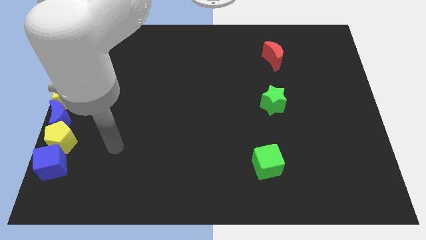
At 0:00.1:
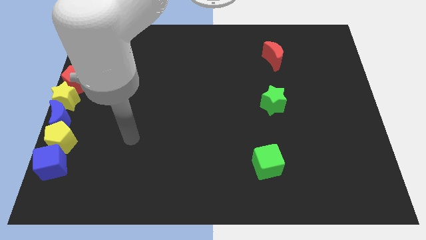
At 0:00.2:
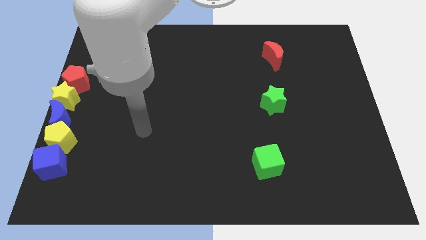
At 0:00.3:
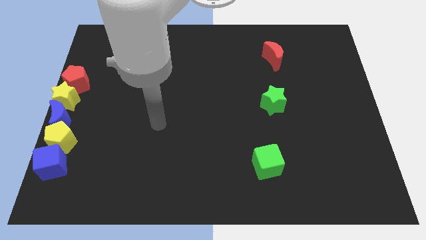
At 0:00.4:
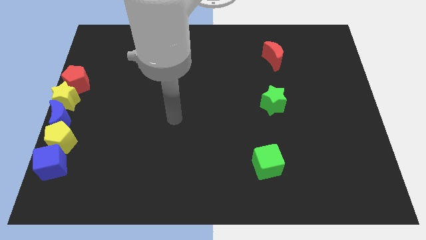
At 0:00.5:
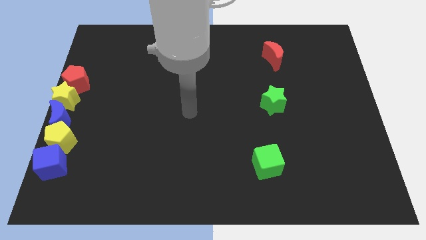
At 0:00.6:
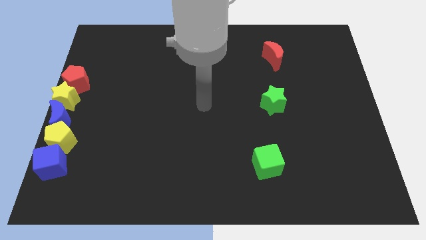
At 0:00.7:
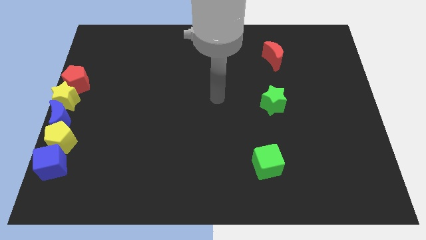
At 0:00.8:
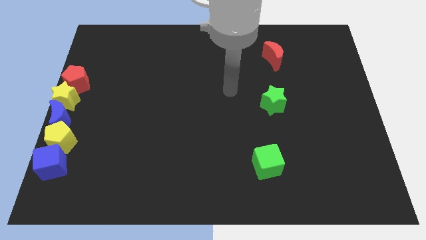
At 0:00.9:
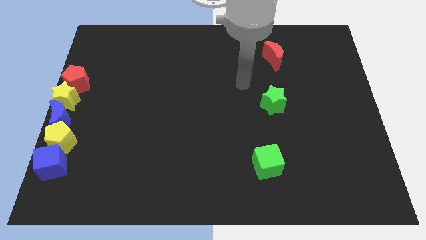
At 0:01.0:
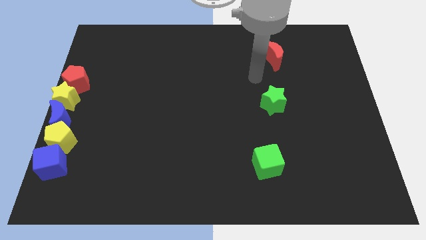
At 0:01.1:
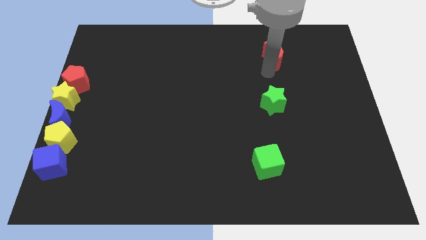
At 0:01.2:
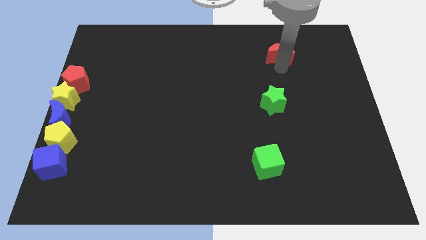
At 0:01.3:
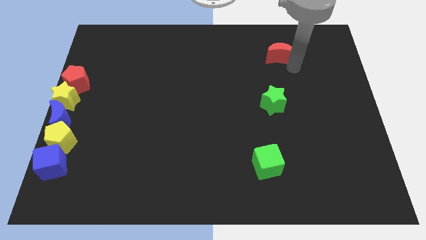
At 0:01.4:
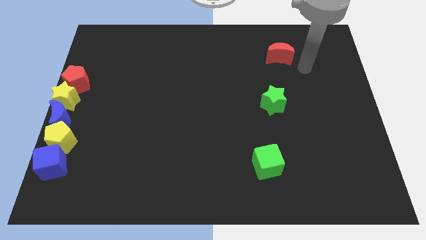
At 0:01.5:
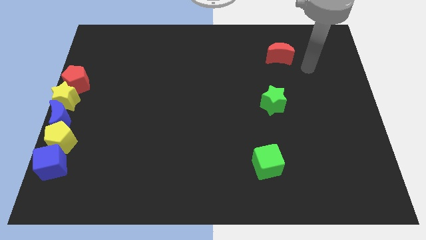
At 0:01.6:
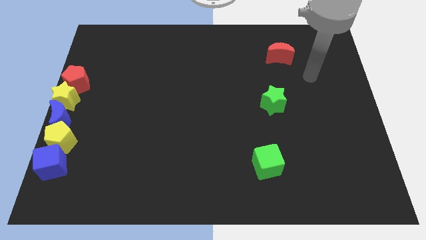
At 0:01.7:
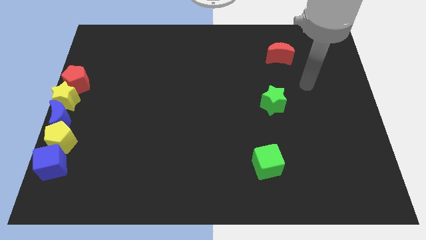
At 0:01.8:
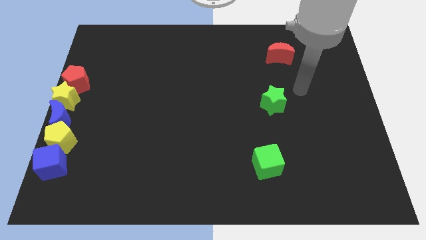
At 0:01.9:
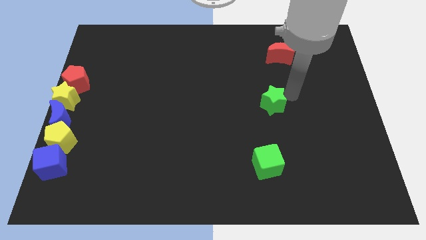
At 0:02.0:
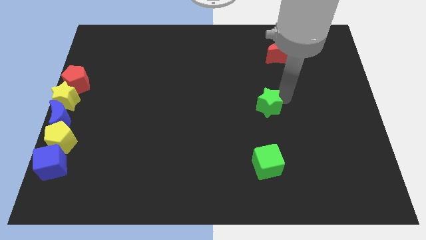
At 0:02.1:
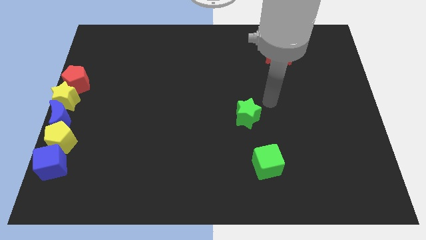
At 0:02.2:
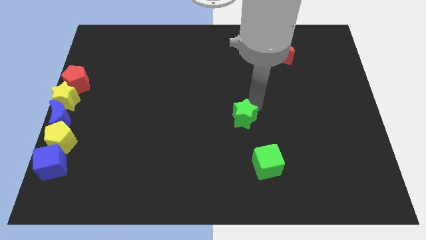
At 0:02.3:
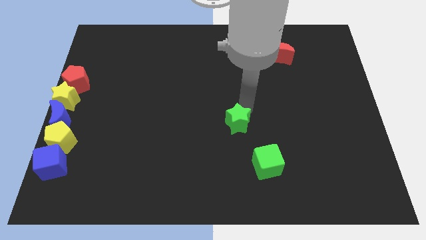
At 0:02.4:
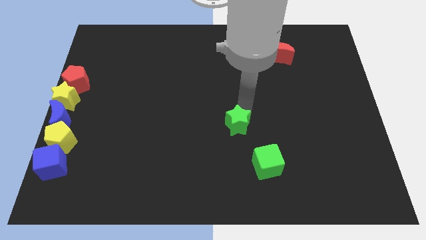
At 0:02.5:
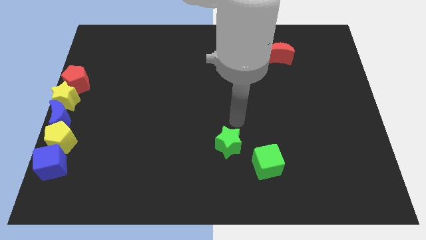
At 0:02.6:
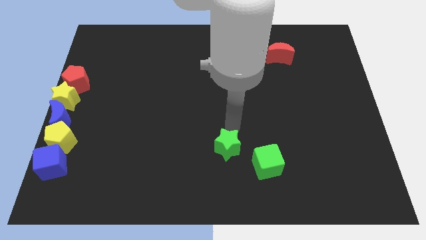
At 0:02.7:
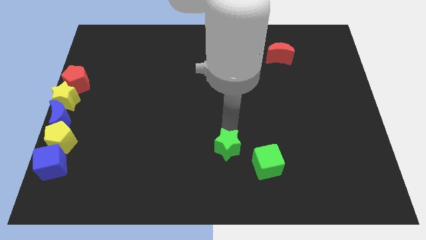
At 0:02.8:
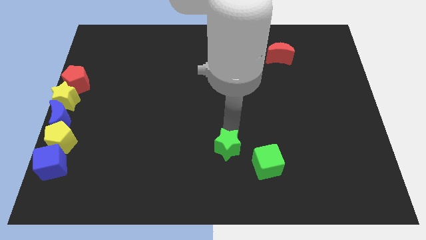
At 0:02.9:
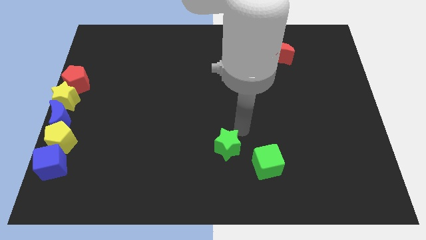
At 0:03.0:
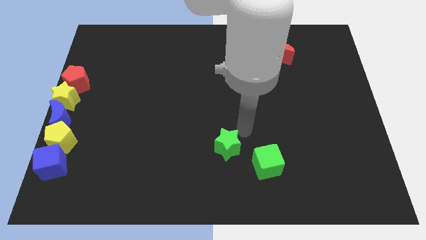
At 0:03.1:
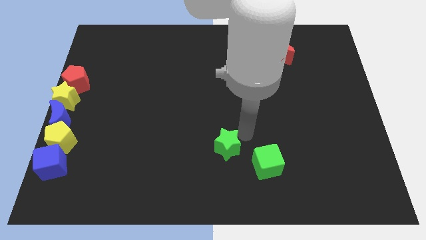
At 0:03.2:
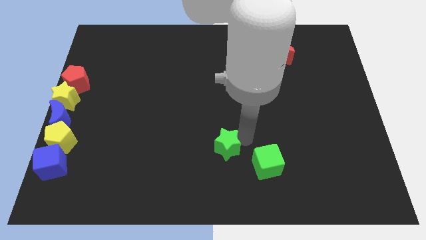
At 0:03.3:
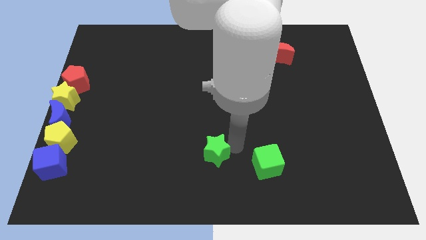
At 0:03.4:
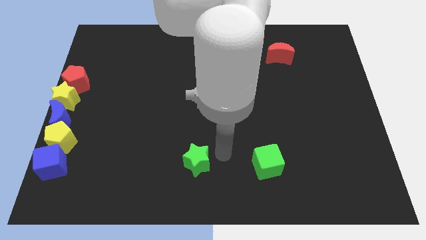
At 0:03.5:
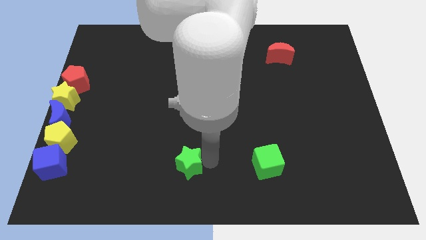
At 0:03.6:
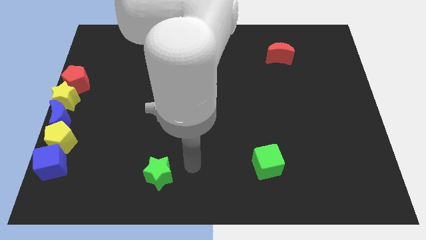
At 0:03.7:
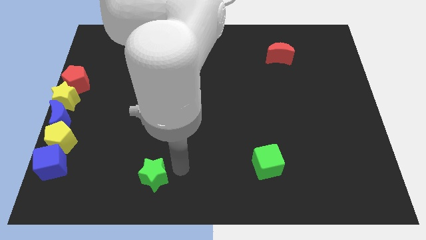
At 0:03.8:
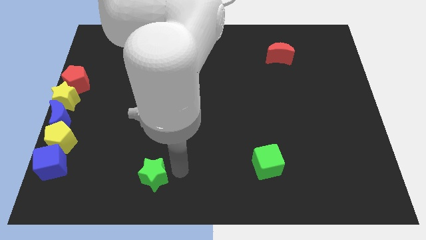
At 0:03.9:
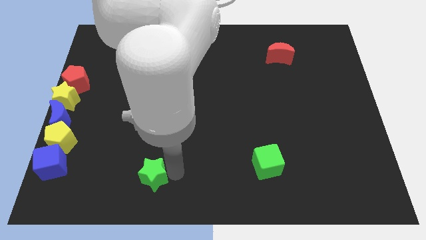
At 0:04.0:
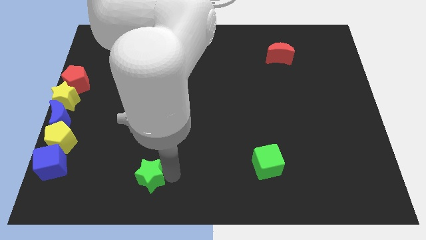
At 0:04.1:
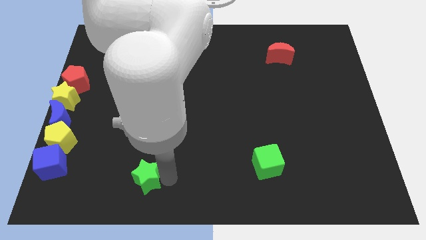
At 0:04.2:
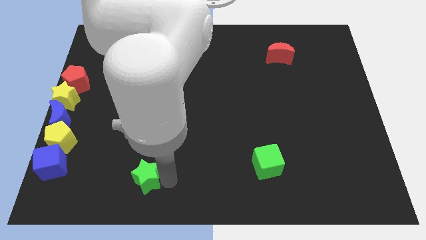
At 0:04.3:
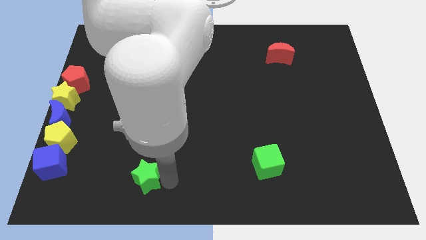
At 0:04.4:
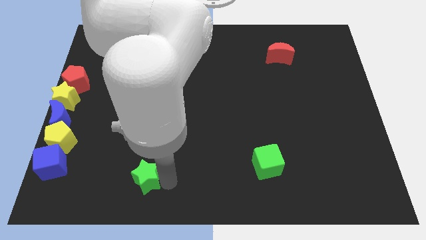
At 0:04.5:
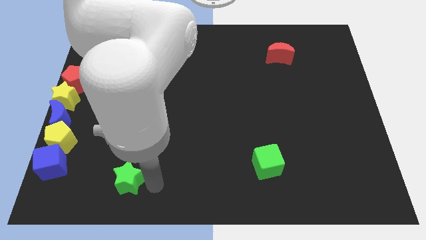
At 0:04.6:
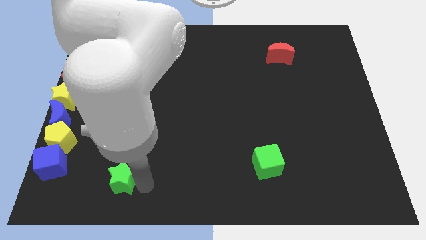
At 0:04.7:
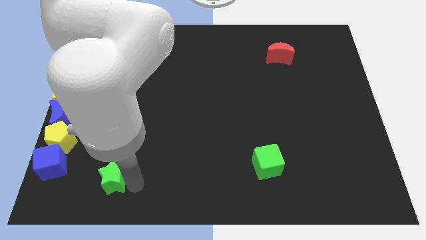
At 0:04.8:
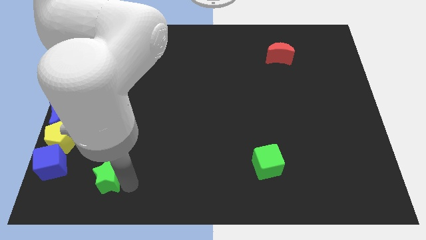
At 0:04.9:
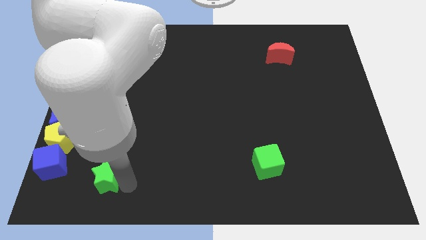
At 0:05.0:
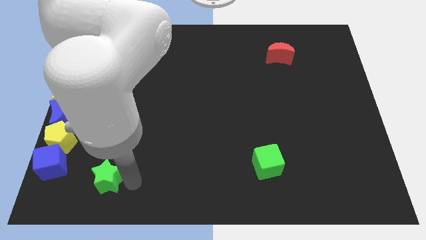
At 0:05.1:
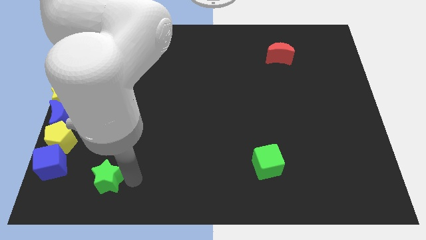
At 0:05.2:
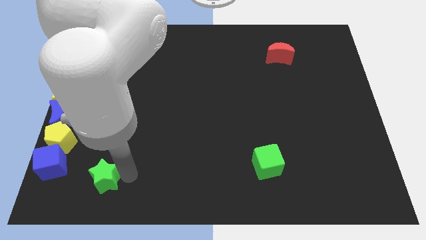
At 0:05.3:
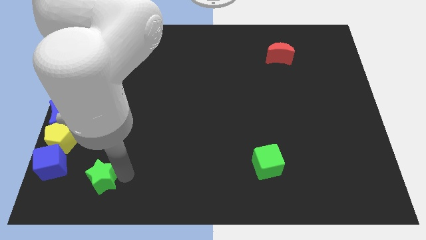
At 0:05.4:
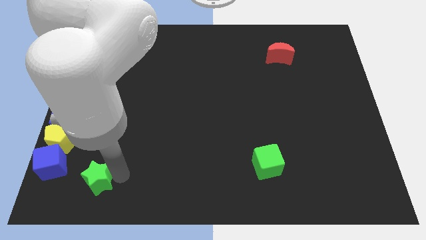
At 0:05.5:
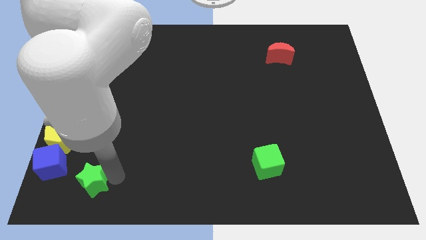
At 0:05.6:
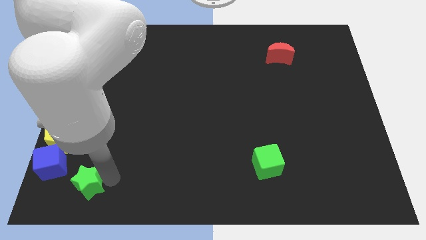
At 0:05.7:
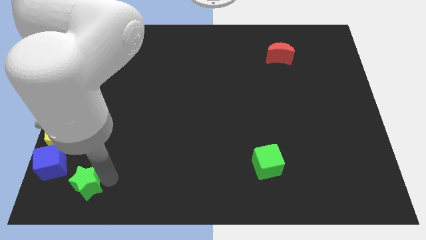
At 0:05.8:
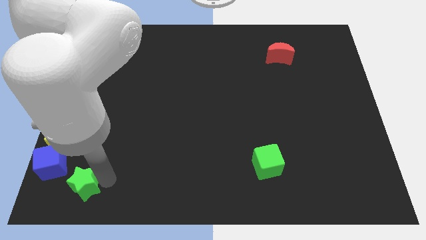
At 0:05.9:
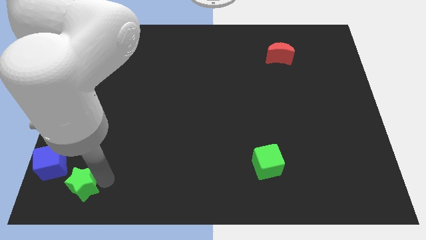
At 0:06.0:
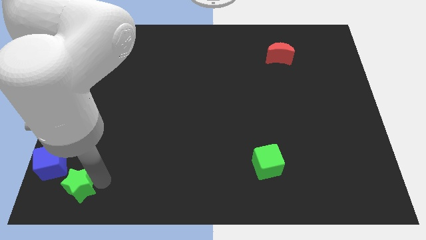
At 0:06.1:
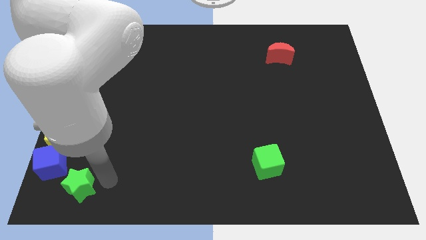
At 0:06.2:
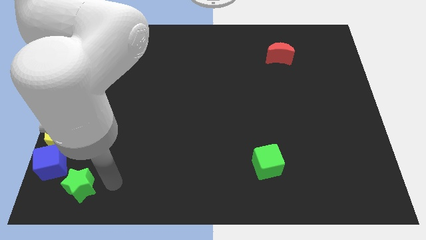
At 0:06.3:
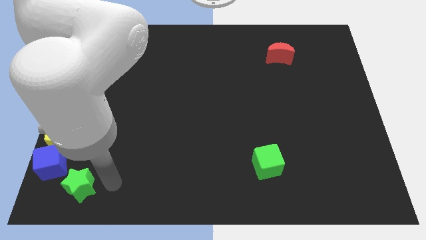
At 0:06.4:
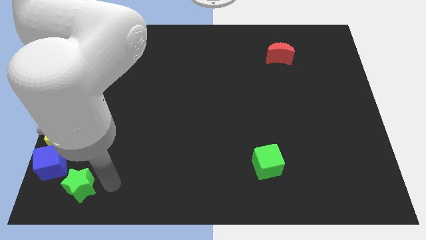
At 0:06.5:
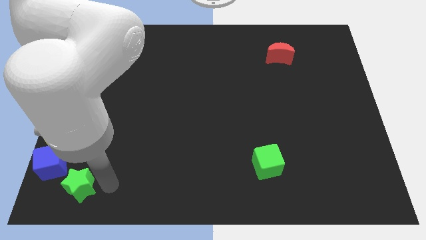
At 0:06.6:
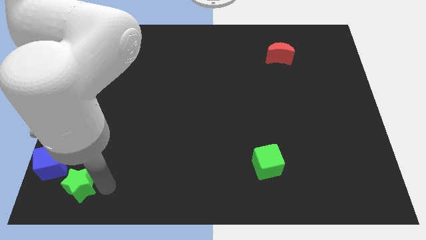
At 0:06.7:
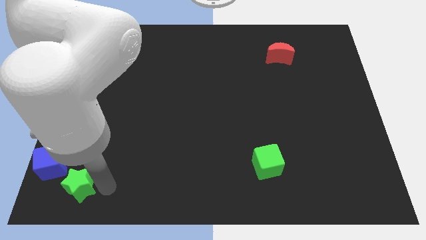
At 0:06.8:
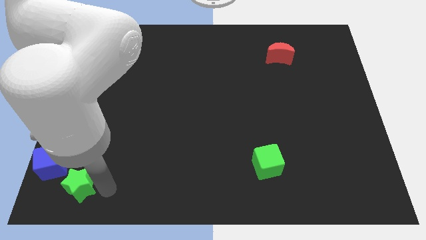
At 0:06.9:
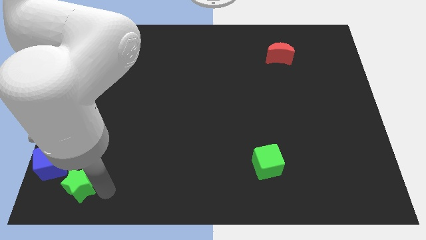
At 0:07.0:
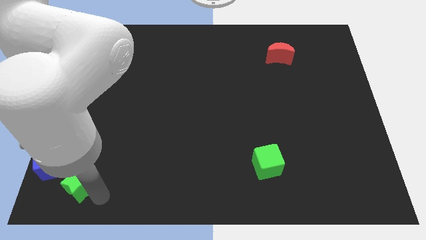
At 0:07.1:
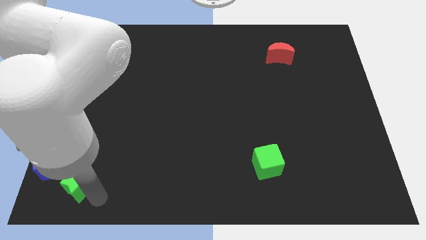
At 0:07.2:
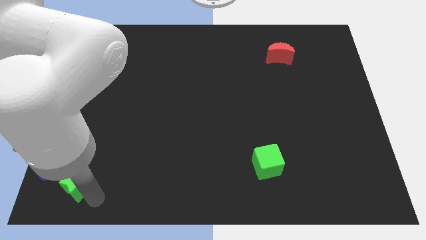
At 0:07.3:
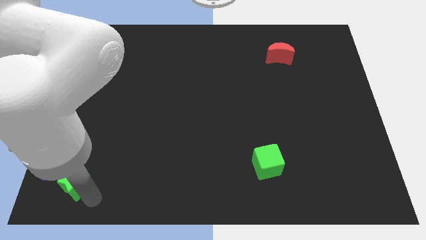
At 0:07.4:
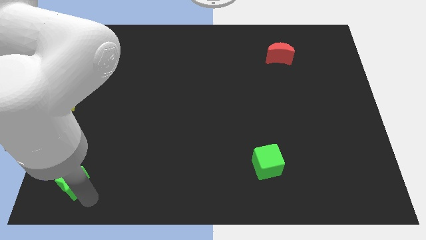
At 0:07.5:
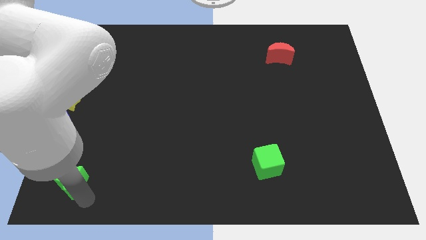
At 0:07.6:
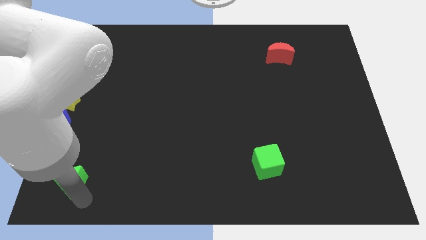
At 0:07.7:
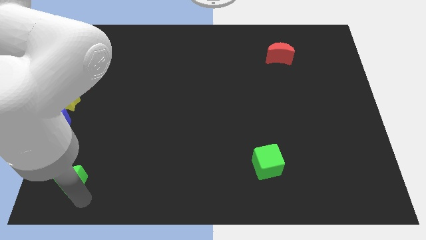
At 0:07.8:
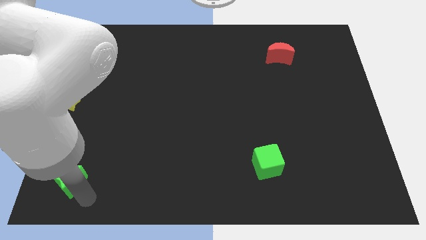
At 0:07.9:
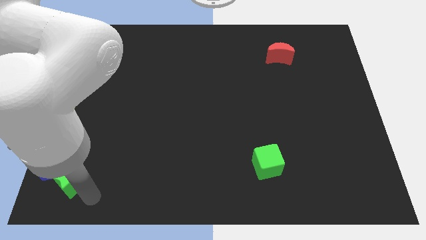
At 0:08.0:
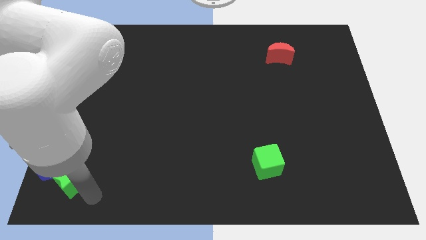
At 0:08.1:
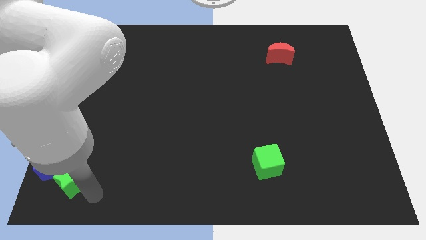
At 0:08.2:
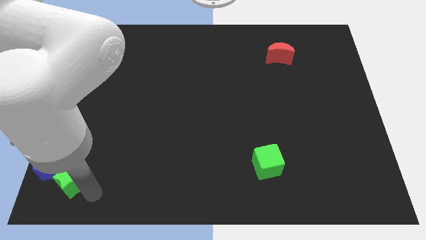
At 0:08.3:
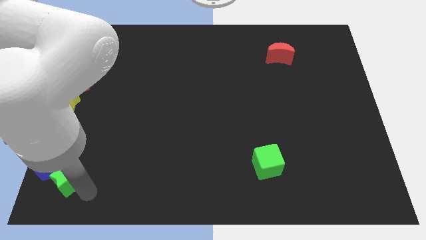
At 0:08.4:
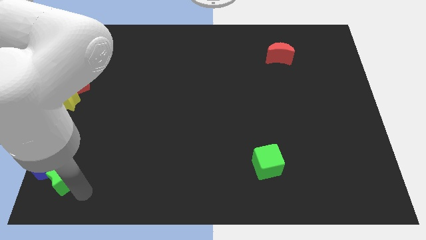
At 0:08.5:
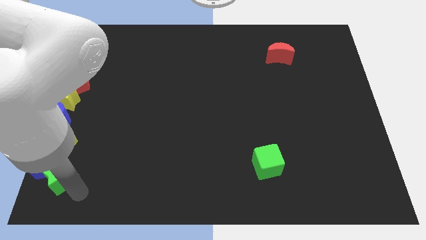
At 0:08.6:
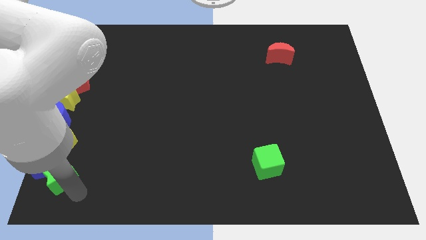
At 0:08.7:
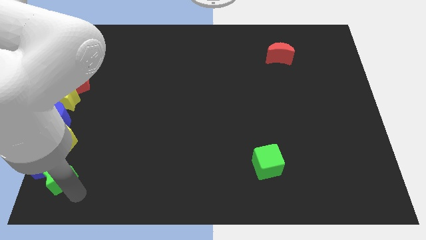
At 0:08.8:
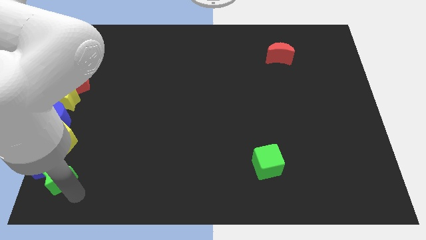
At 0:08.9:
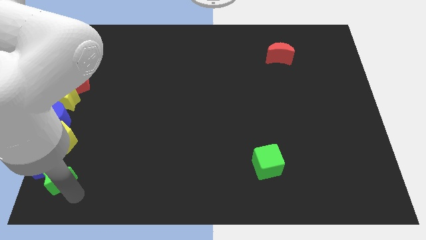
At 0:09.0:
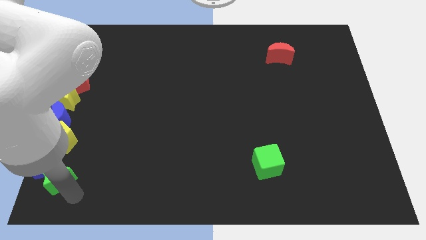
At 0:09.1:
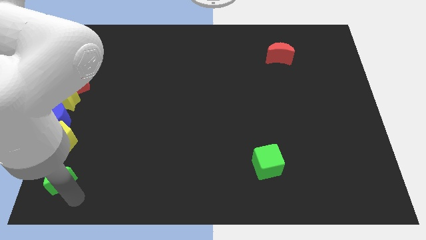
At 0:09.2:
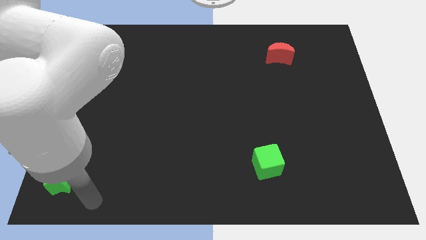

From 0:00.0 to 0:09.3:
place the green star to the bottom right of the blue cube
